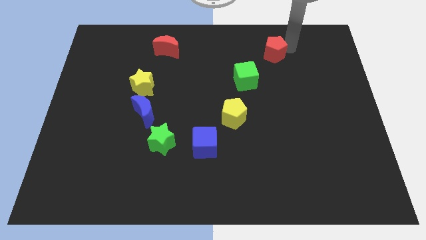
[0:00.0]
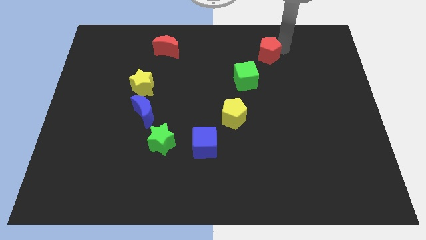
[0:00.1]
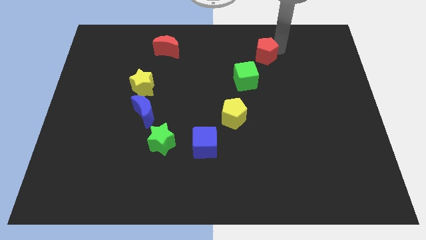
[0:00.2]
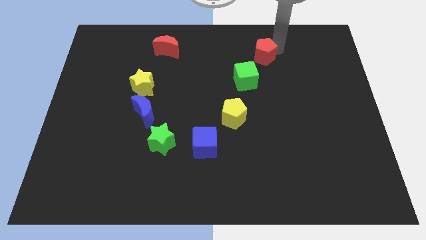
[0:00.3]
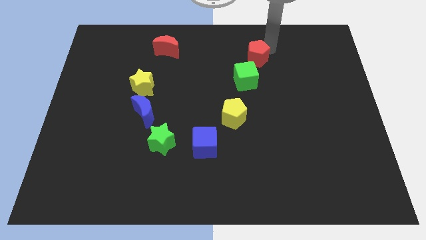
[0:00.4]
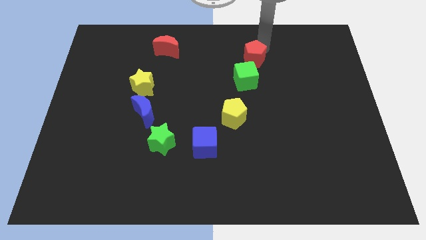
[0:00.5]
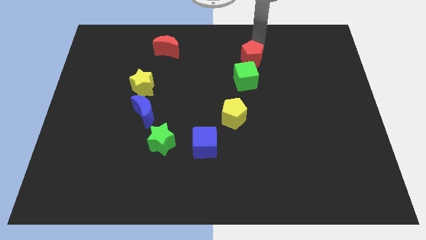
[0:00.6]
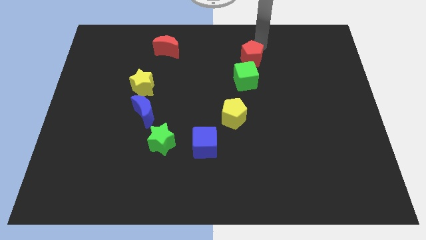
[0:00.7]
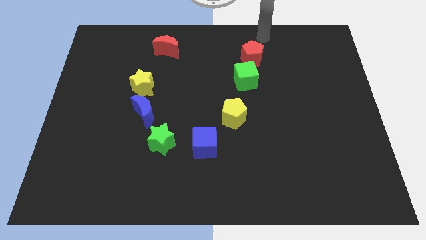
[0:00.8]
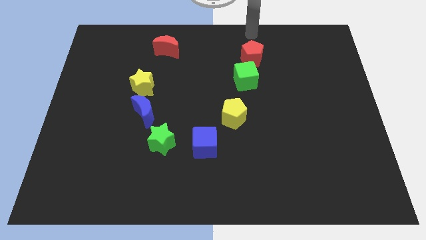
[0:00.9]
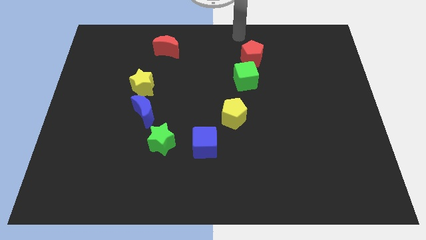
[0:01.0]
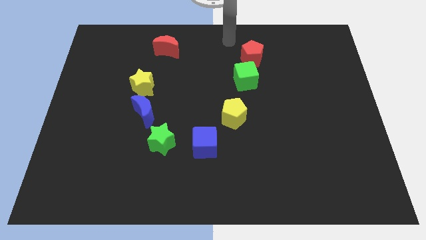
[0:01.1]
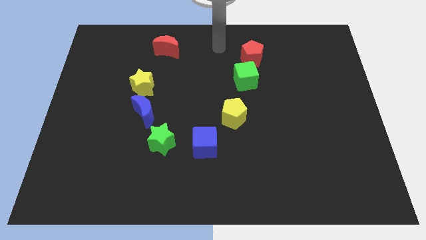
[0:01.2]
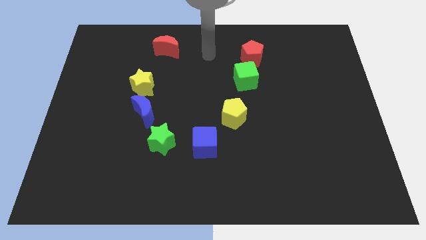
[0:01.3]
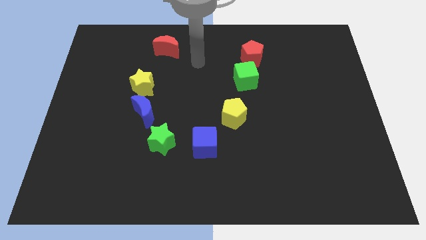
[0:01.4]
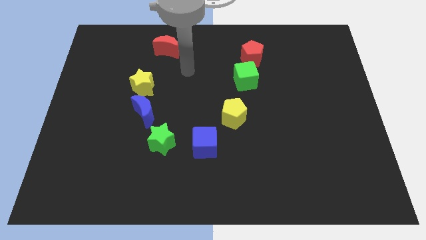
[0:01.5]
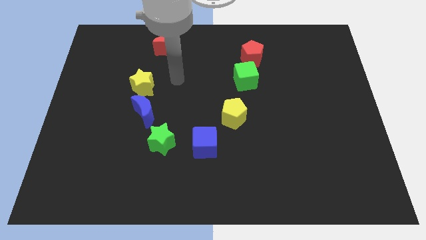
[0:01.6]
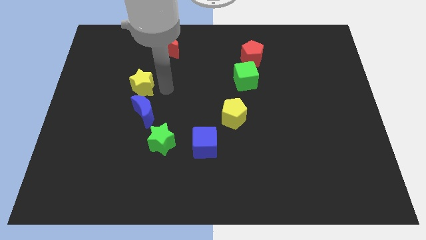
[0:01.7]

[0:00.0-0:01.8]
move the red pentagon to the top of the green cube

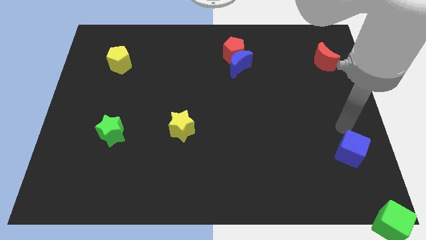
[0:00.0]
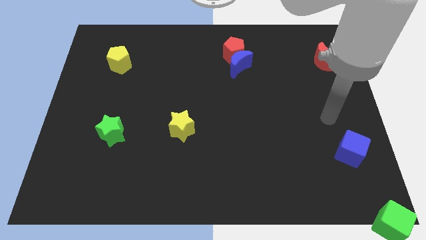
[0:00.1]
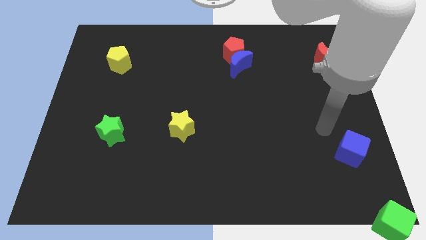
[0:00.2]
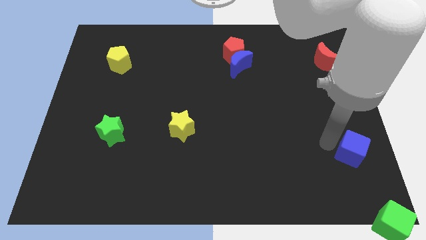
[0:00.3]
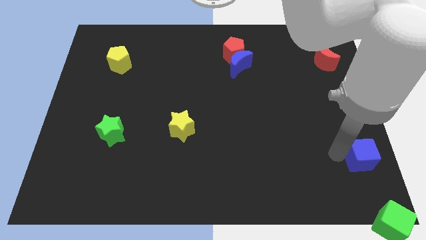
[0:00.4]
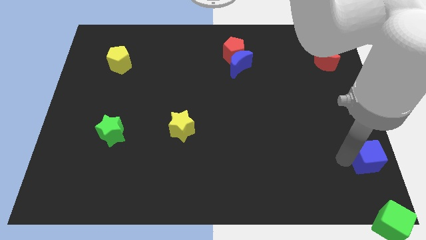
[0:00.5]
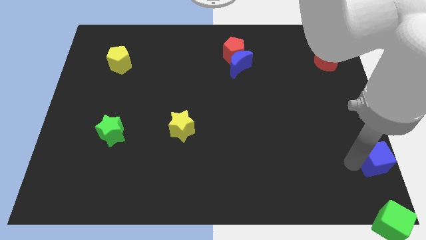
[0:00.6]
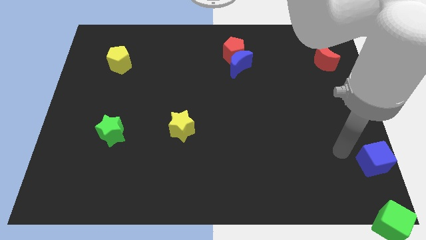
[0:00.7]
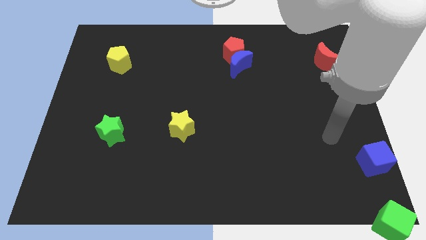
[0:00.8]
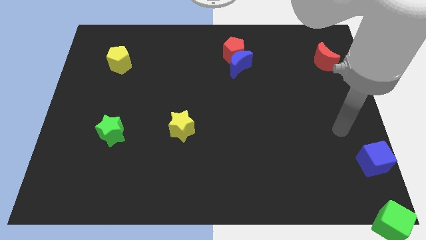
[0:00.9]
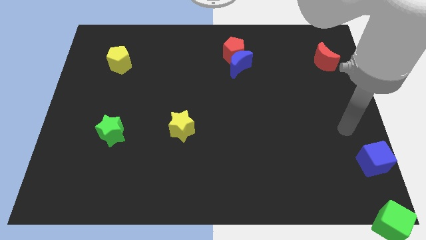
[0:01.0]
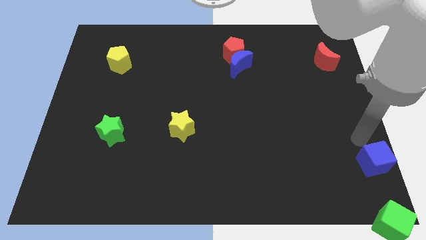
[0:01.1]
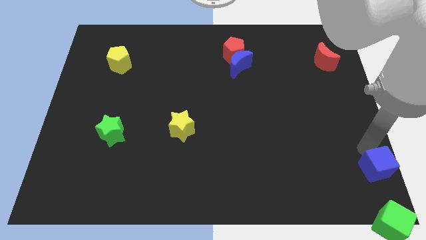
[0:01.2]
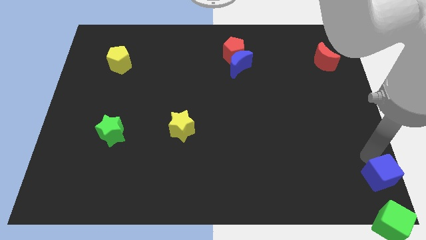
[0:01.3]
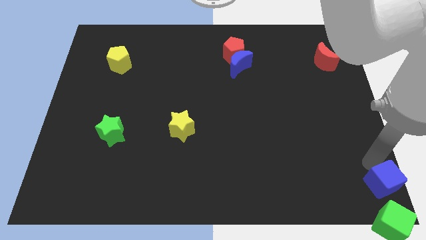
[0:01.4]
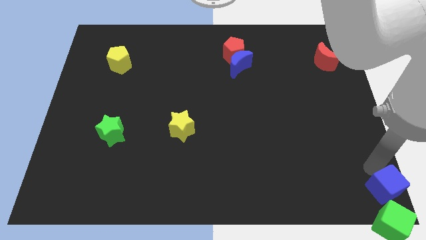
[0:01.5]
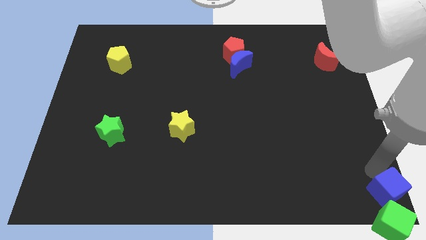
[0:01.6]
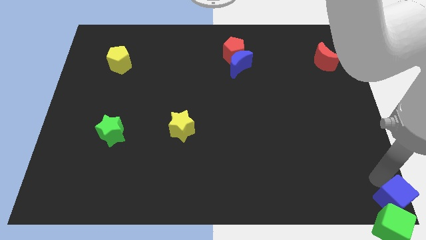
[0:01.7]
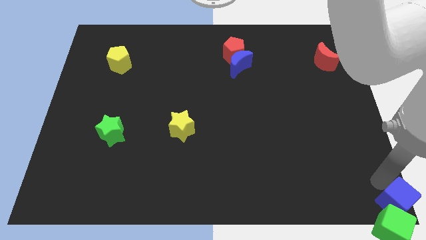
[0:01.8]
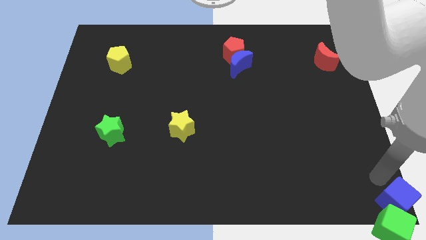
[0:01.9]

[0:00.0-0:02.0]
push the blue cube into the green cube

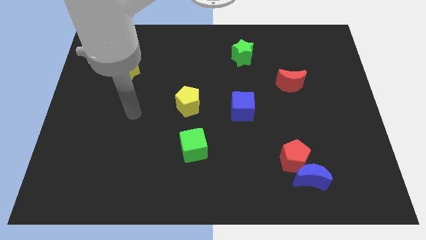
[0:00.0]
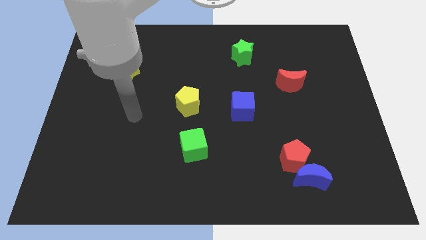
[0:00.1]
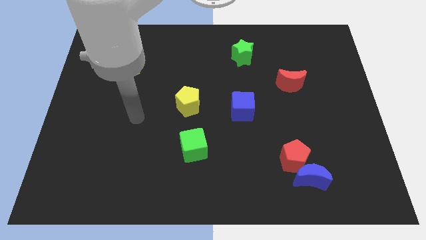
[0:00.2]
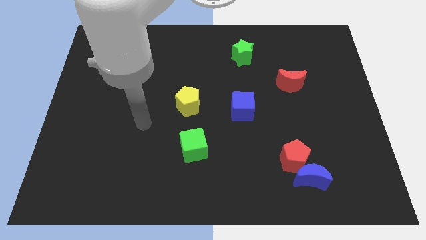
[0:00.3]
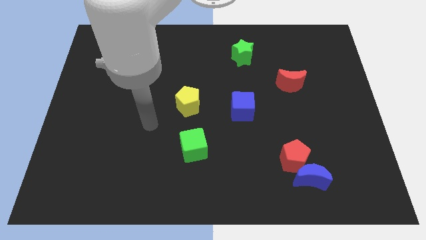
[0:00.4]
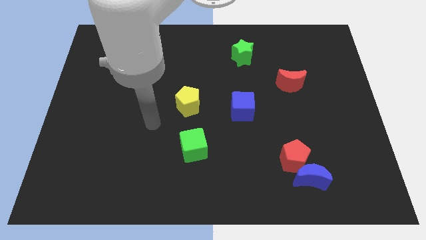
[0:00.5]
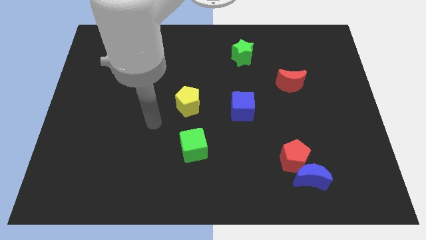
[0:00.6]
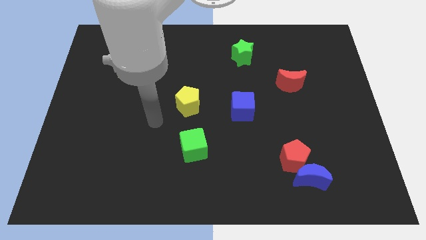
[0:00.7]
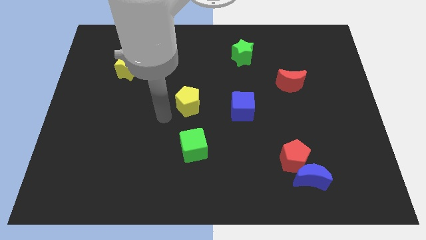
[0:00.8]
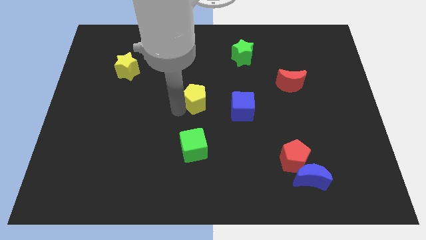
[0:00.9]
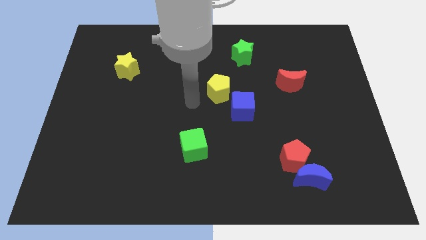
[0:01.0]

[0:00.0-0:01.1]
touch the yellow pentagon

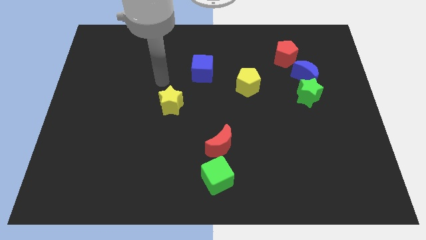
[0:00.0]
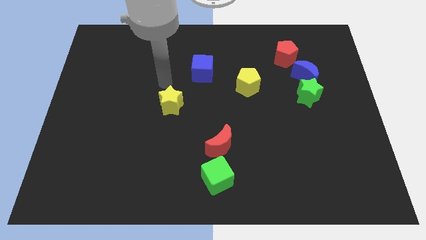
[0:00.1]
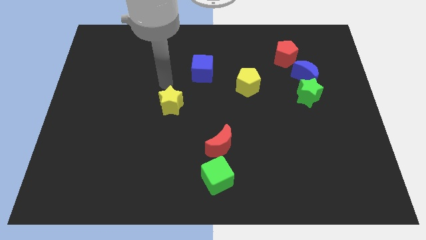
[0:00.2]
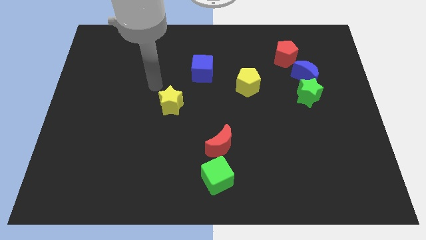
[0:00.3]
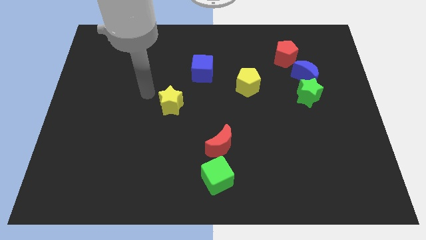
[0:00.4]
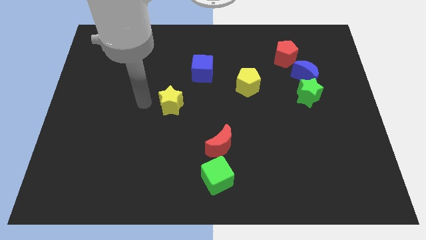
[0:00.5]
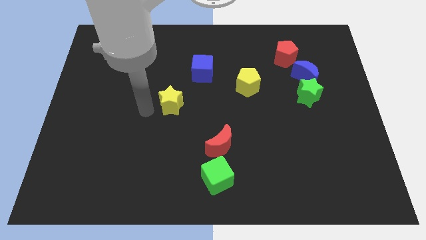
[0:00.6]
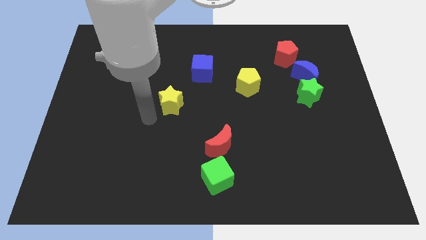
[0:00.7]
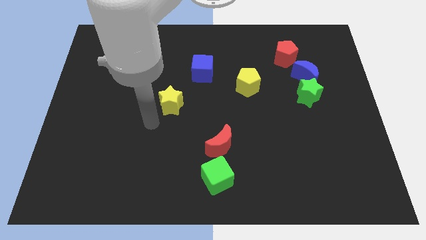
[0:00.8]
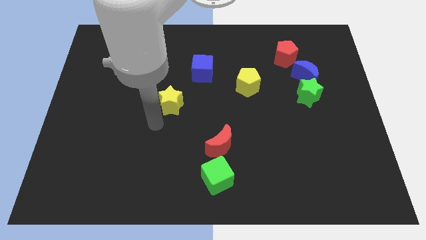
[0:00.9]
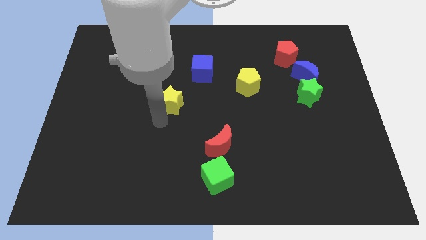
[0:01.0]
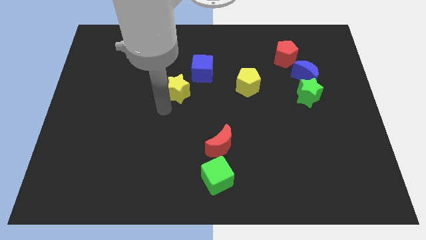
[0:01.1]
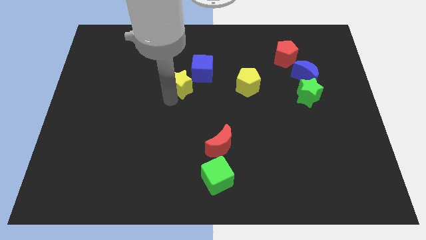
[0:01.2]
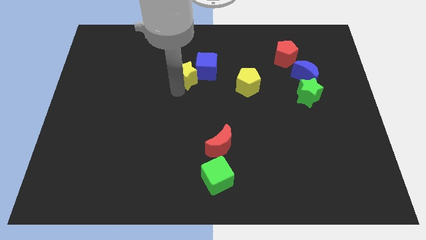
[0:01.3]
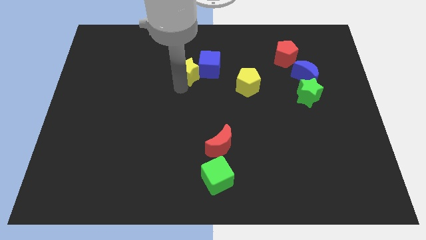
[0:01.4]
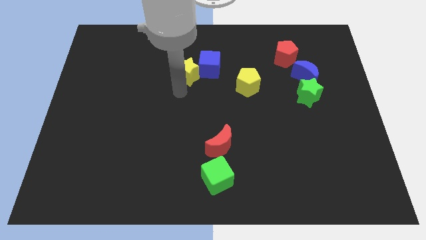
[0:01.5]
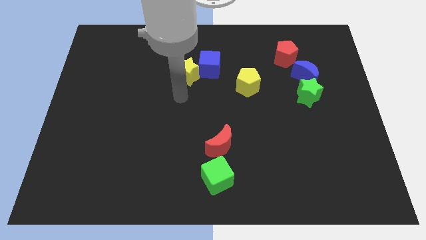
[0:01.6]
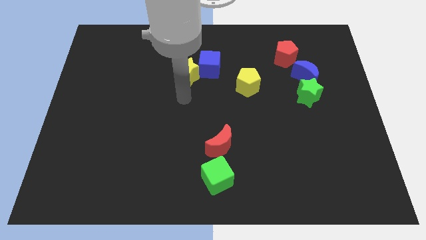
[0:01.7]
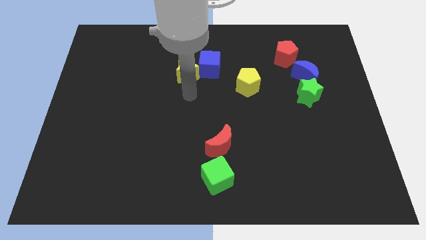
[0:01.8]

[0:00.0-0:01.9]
push the yellow star into the blue cube

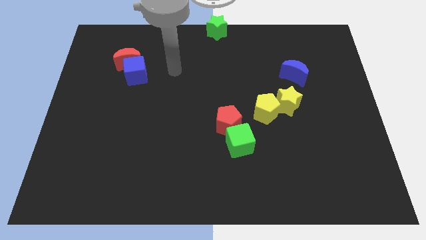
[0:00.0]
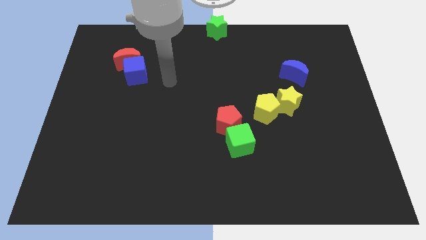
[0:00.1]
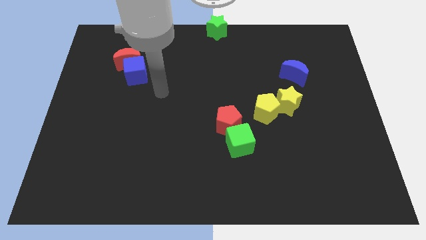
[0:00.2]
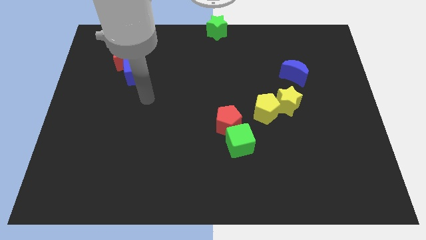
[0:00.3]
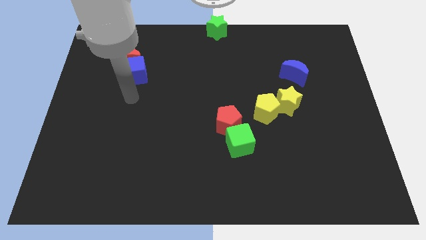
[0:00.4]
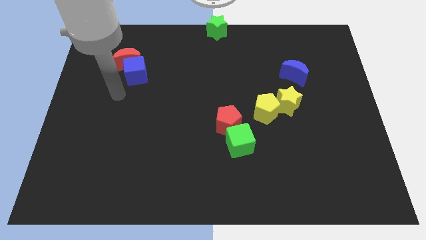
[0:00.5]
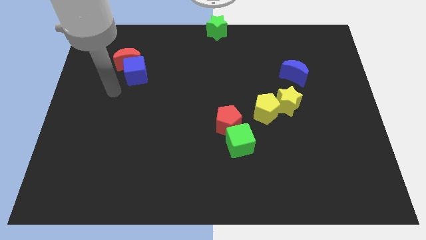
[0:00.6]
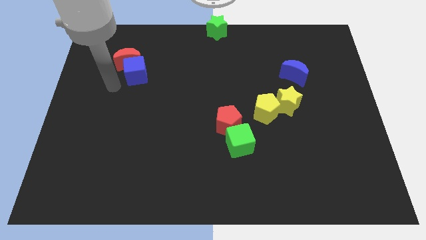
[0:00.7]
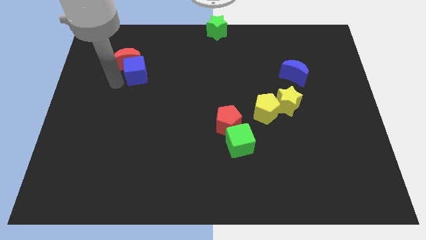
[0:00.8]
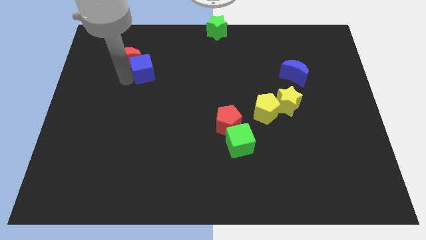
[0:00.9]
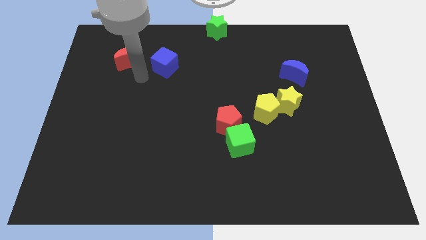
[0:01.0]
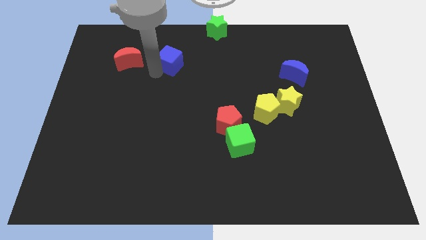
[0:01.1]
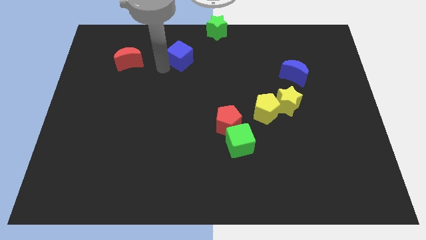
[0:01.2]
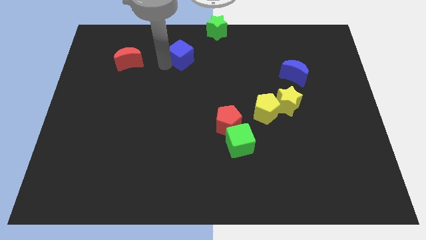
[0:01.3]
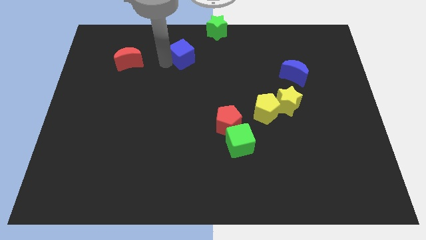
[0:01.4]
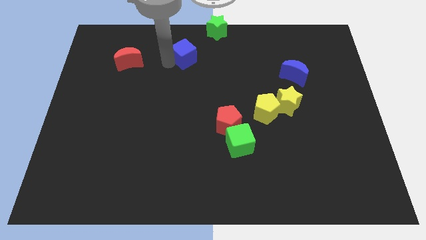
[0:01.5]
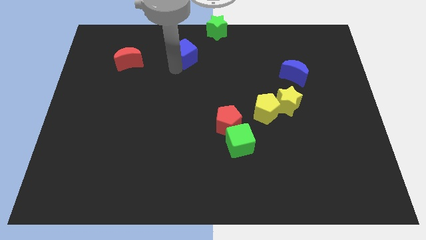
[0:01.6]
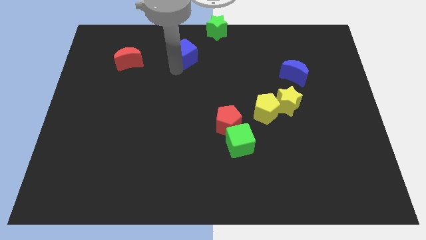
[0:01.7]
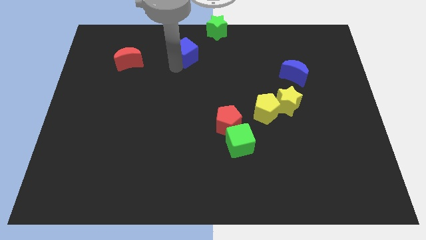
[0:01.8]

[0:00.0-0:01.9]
separate the blue cube from the red moon

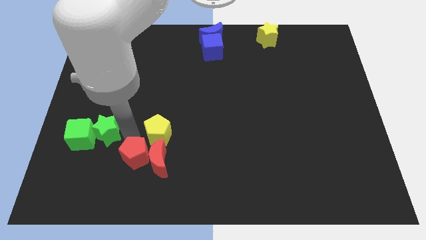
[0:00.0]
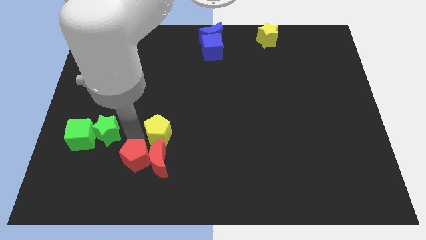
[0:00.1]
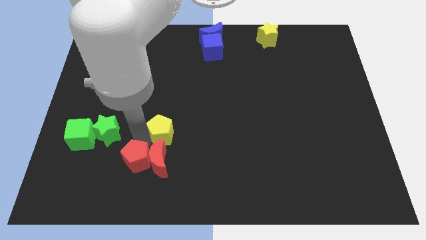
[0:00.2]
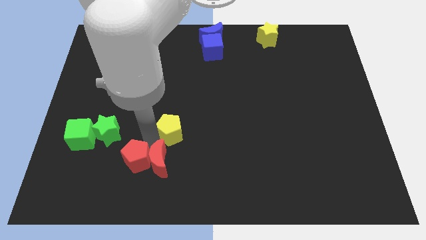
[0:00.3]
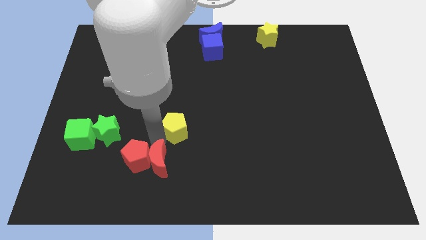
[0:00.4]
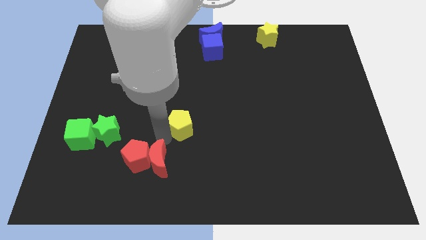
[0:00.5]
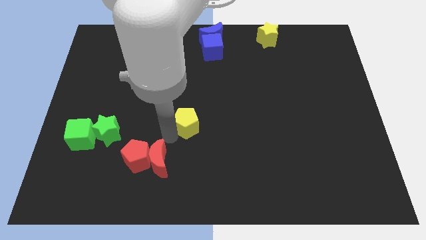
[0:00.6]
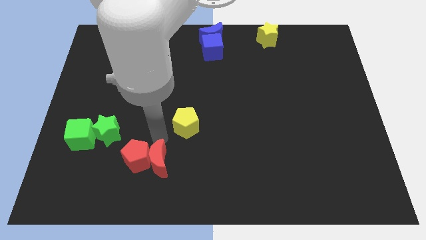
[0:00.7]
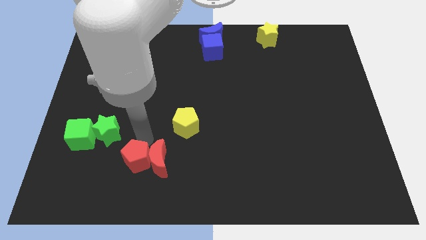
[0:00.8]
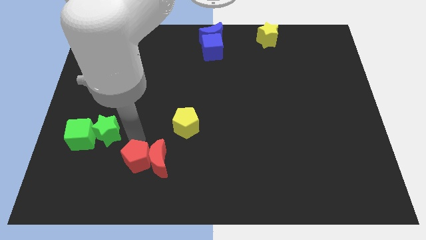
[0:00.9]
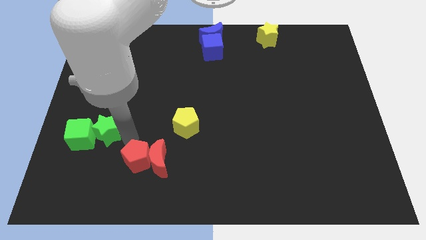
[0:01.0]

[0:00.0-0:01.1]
separate yellow pentagon from red blocks
